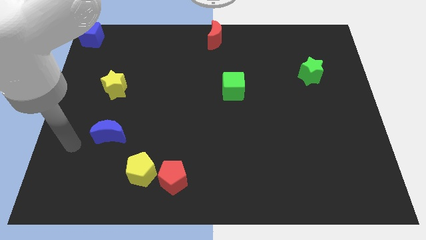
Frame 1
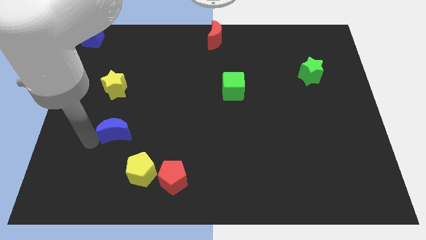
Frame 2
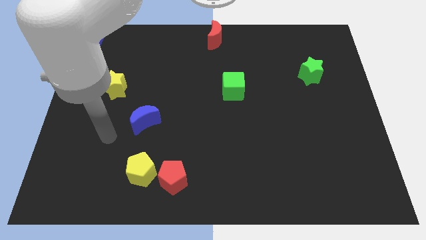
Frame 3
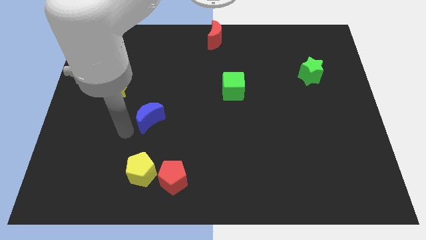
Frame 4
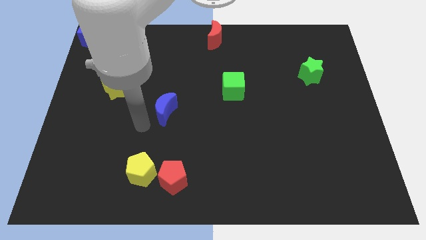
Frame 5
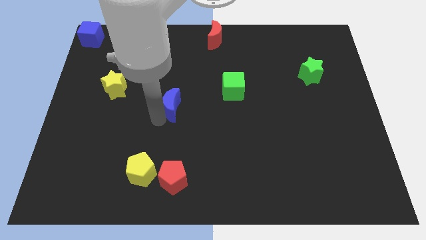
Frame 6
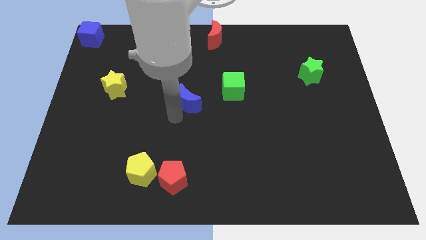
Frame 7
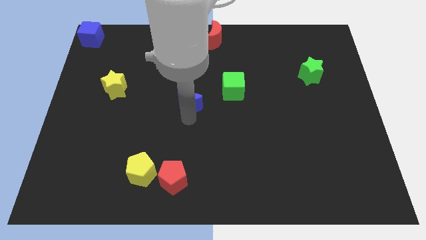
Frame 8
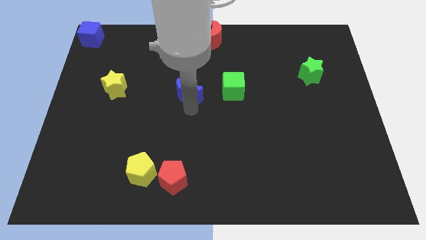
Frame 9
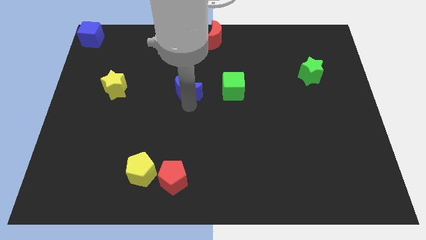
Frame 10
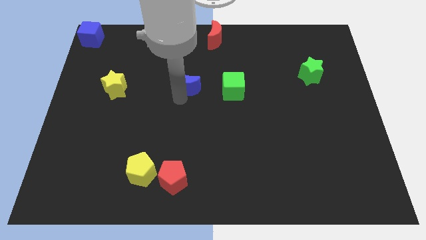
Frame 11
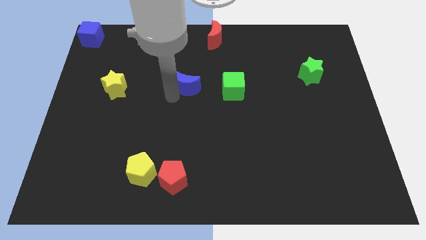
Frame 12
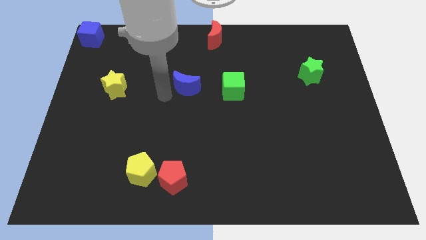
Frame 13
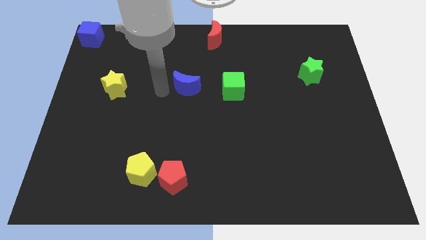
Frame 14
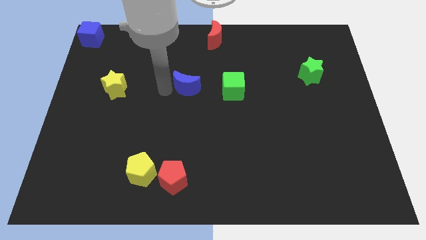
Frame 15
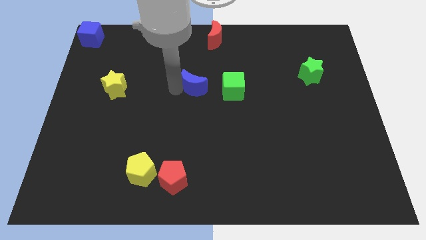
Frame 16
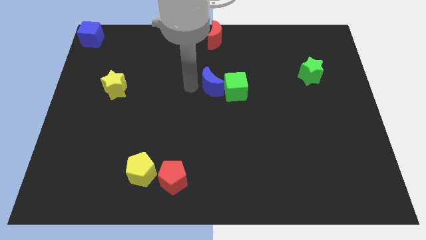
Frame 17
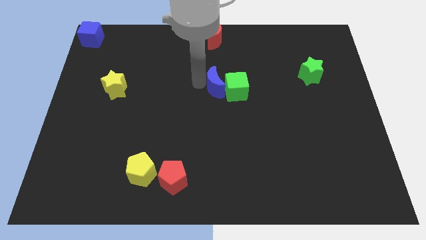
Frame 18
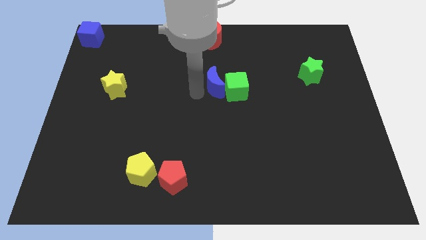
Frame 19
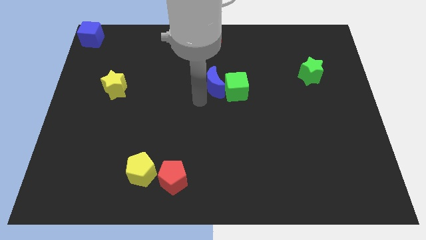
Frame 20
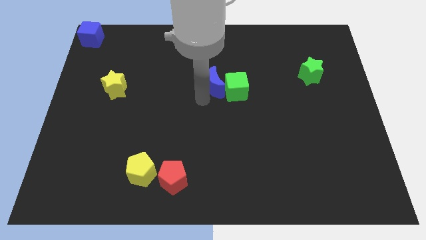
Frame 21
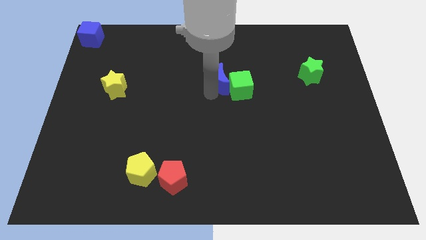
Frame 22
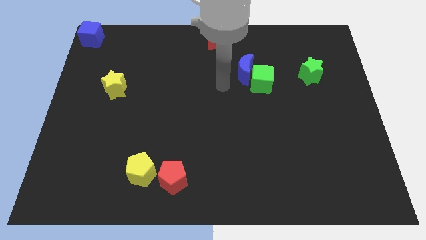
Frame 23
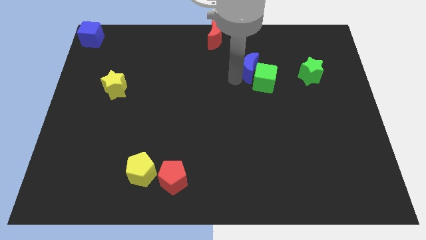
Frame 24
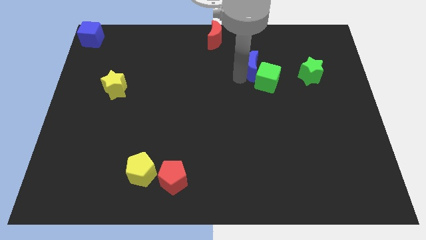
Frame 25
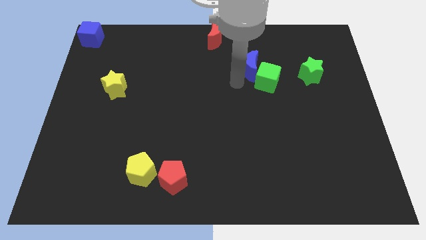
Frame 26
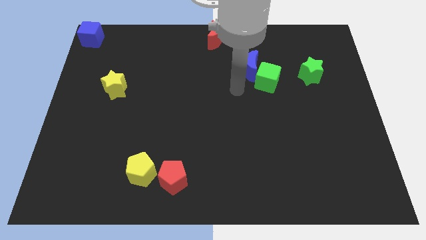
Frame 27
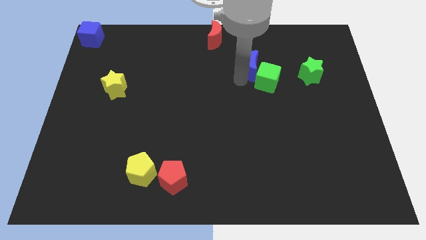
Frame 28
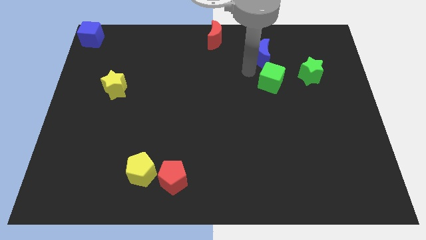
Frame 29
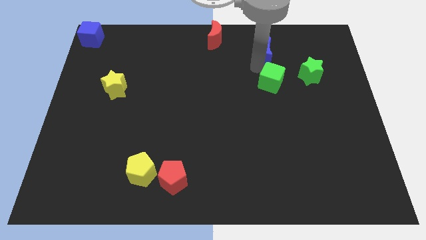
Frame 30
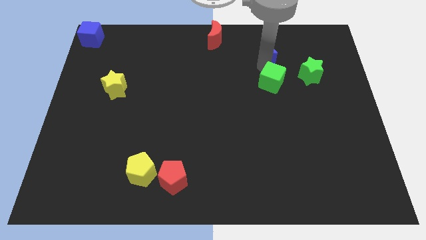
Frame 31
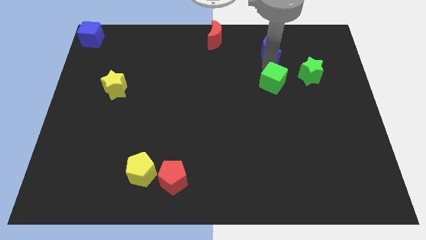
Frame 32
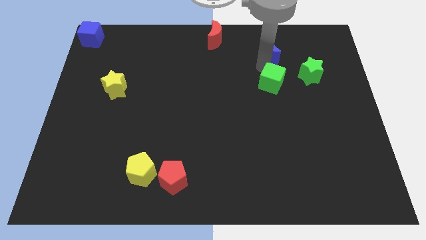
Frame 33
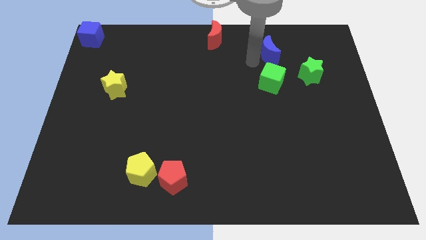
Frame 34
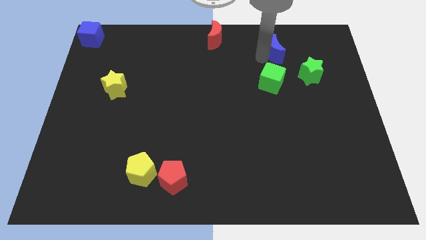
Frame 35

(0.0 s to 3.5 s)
place the blue moon in between the red moon and green star

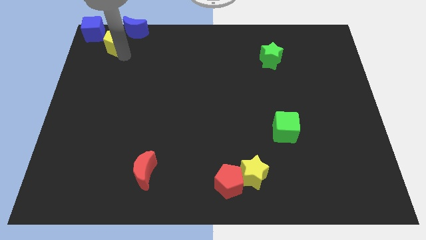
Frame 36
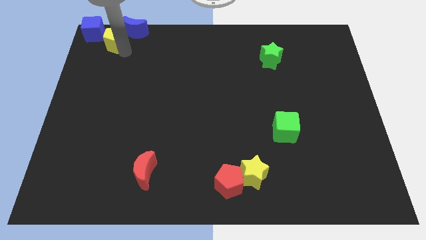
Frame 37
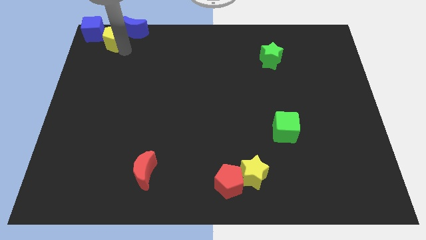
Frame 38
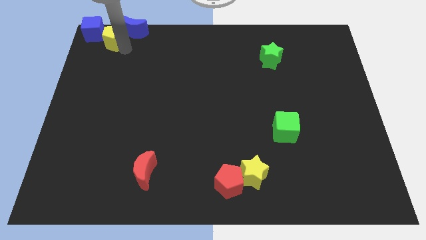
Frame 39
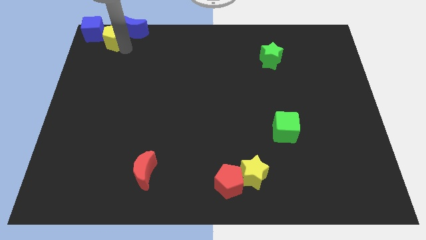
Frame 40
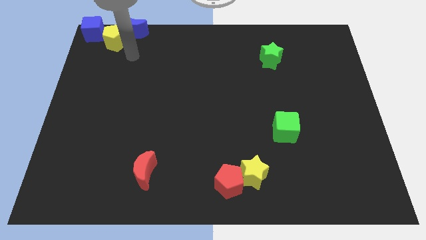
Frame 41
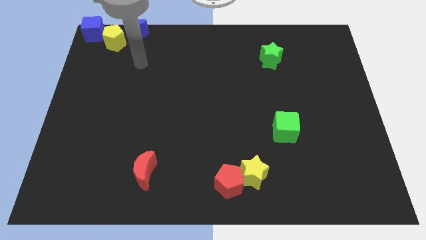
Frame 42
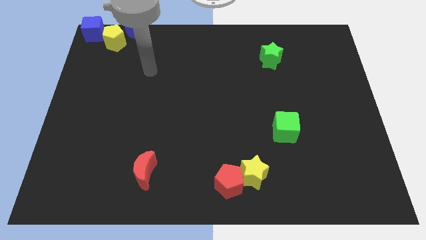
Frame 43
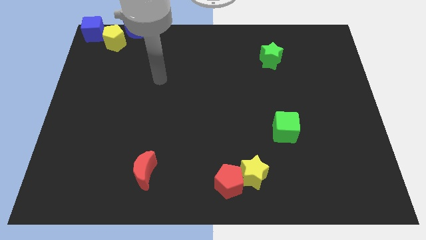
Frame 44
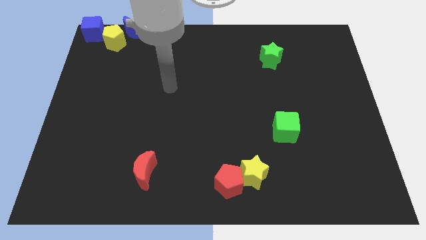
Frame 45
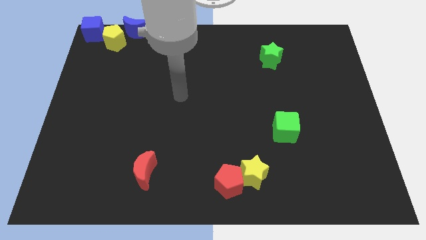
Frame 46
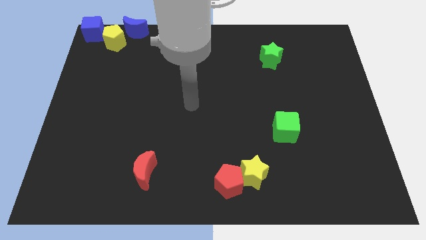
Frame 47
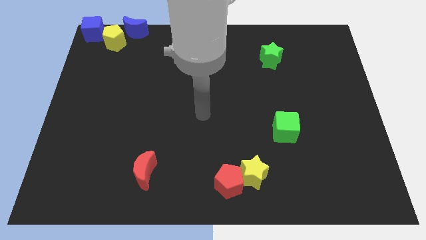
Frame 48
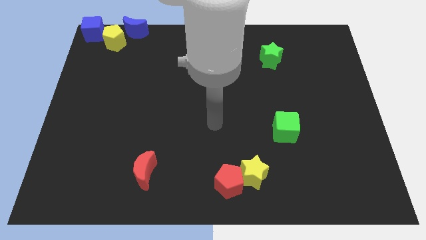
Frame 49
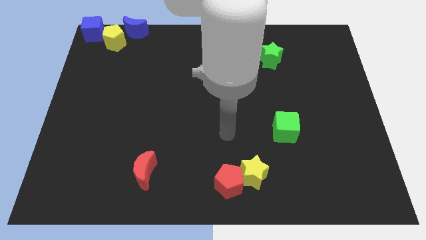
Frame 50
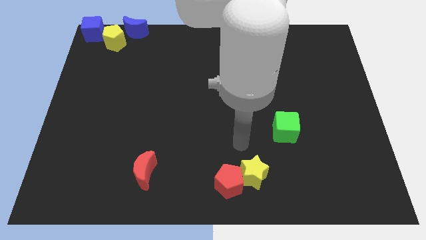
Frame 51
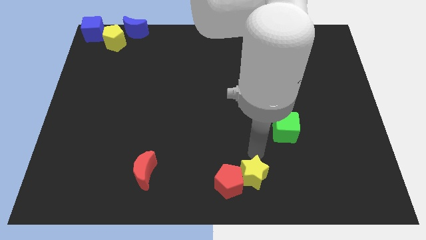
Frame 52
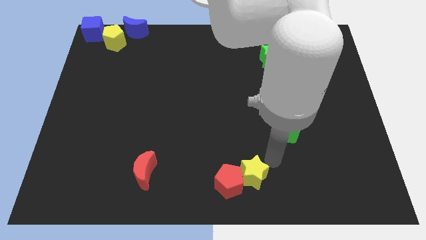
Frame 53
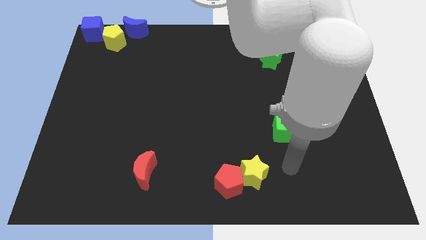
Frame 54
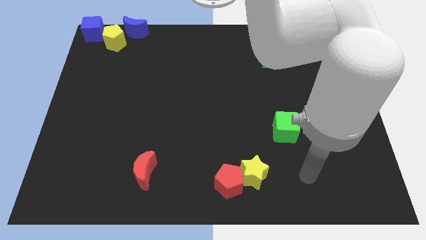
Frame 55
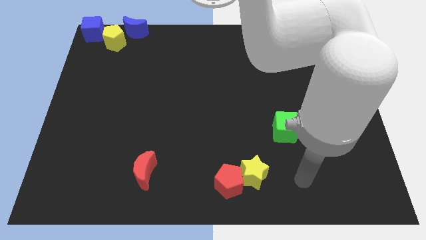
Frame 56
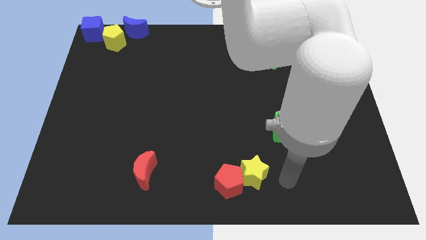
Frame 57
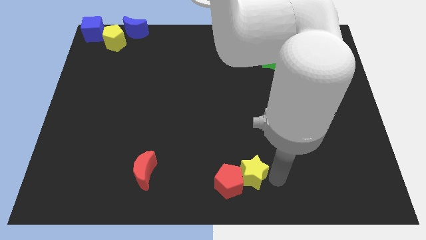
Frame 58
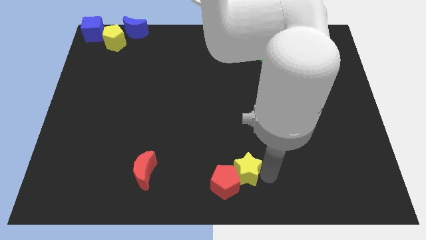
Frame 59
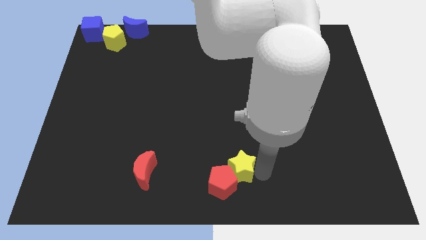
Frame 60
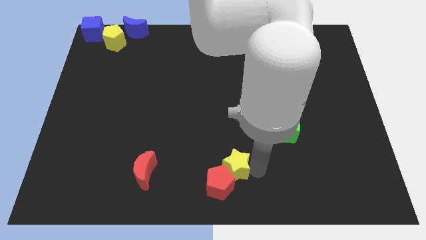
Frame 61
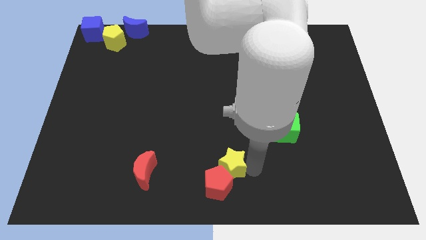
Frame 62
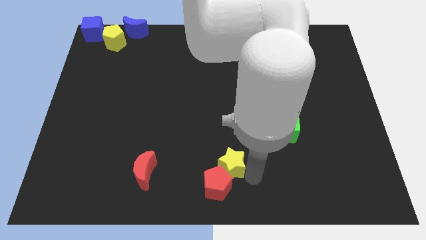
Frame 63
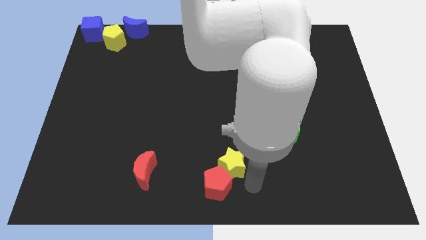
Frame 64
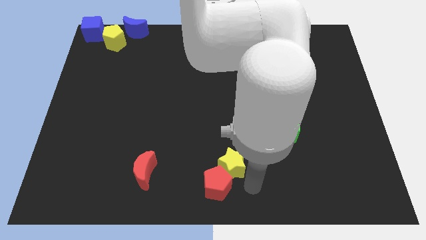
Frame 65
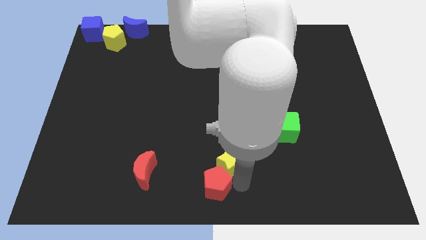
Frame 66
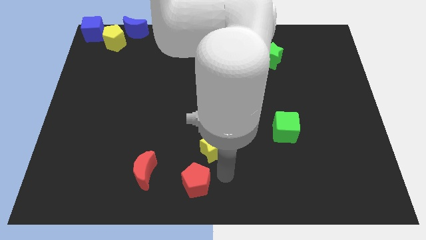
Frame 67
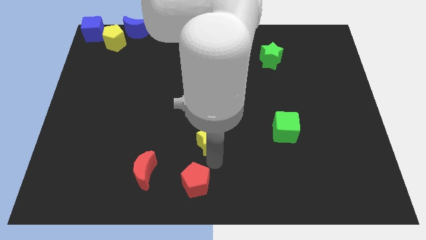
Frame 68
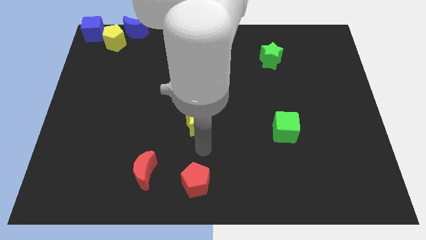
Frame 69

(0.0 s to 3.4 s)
separate the yellow star from the red pentagon

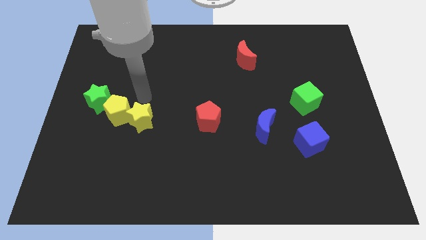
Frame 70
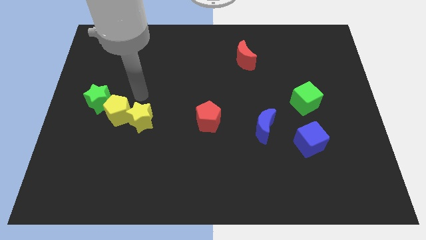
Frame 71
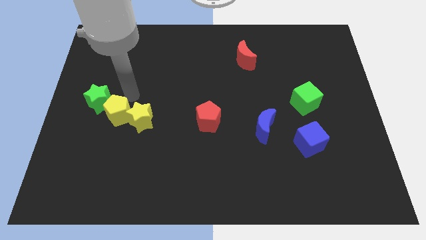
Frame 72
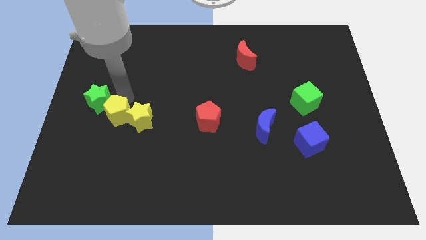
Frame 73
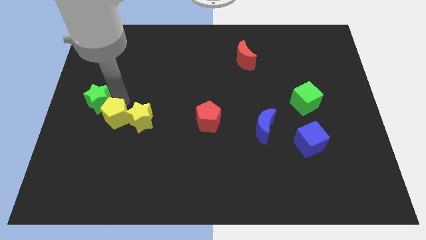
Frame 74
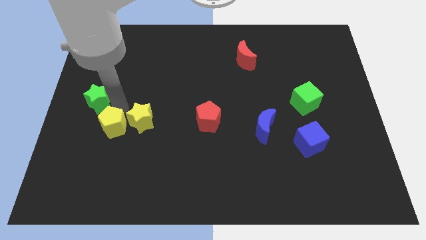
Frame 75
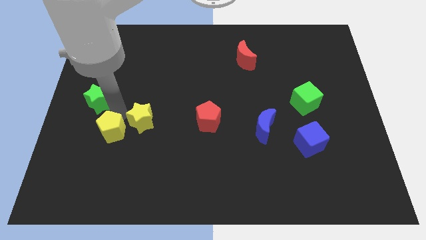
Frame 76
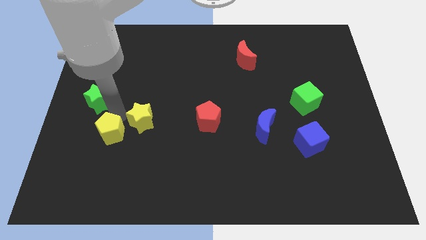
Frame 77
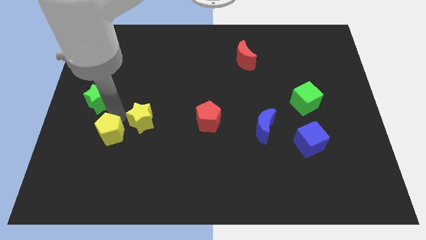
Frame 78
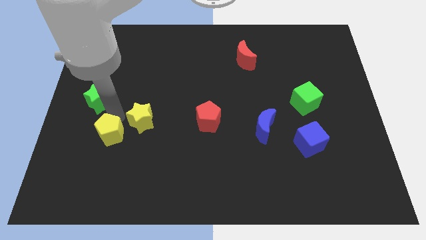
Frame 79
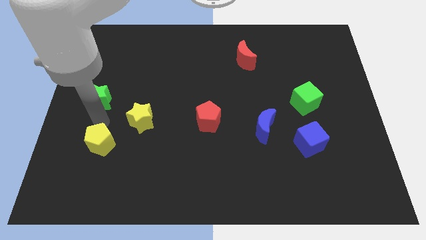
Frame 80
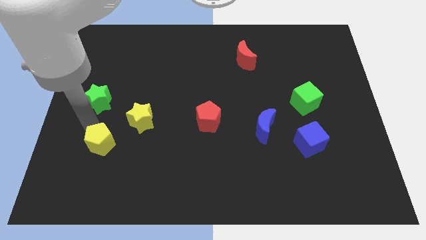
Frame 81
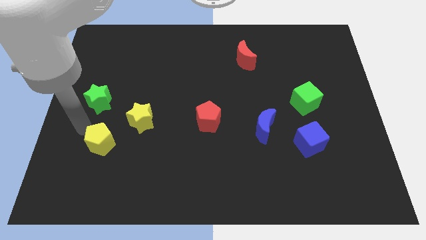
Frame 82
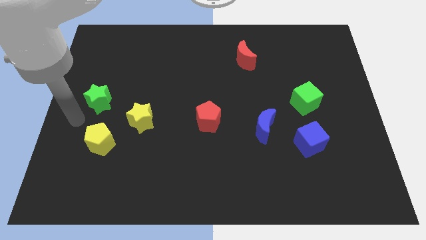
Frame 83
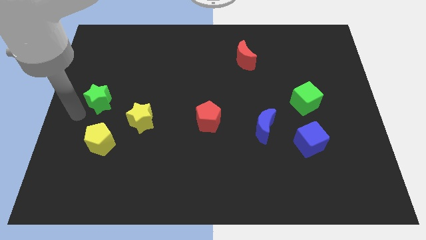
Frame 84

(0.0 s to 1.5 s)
move the yellow pentagon to the bottom left of the yellow star

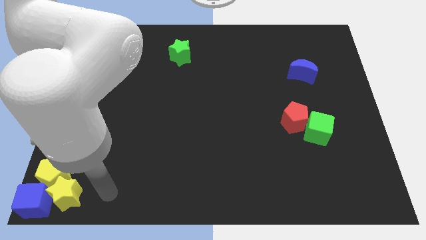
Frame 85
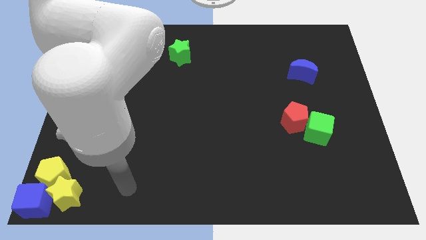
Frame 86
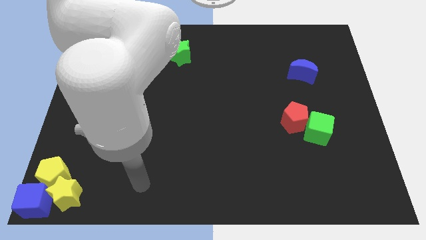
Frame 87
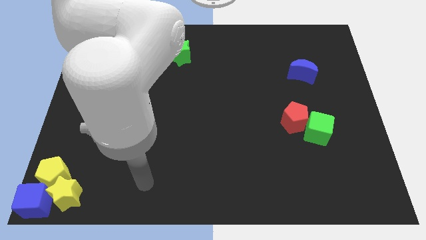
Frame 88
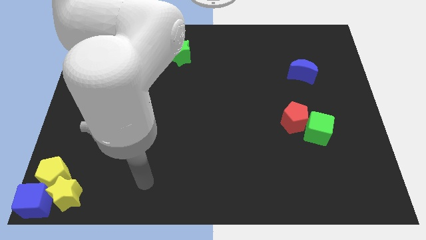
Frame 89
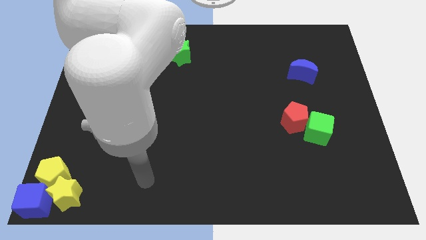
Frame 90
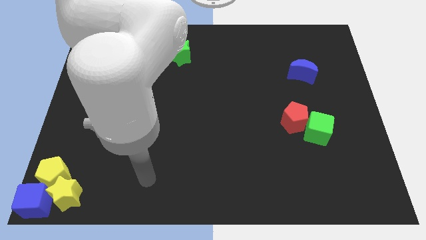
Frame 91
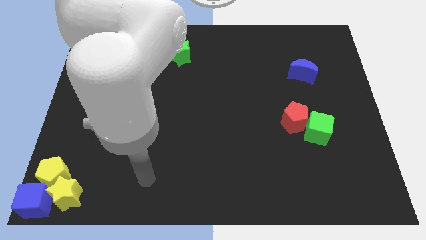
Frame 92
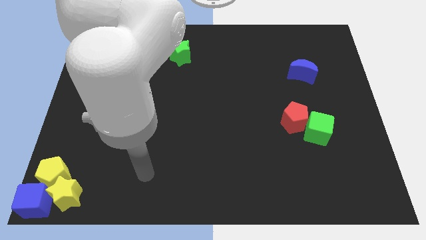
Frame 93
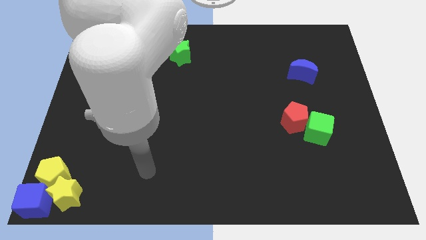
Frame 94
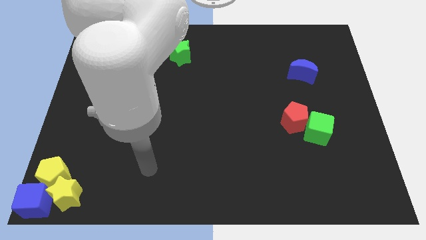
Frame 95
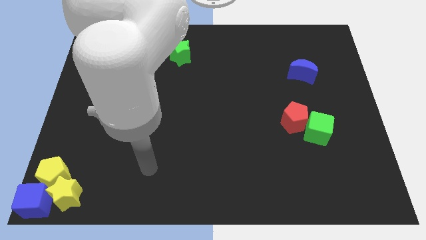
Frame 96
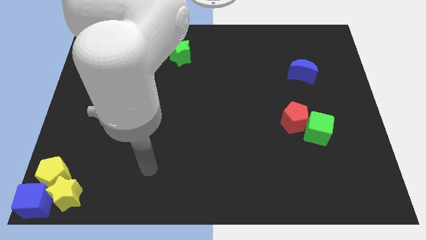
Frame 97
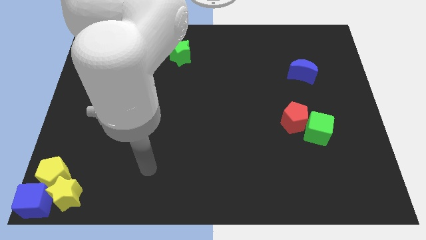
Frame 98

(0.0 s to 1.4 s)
move your arm away from yellow star
